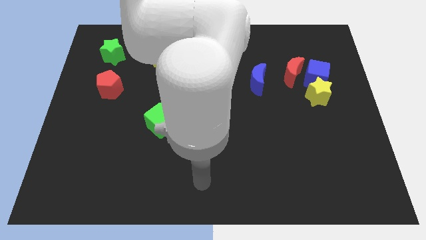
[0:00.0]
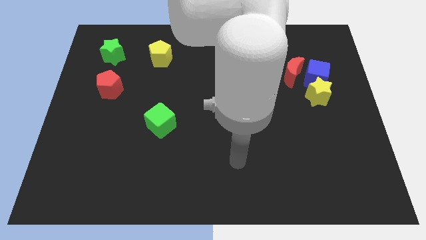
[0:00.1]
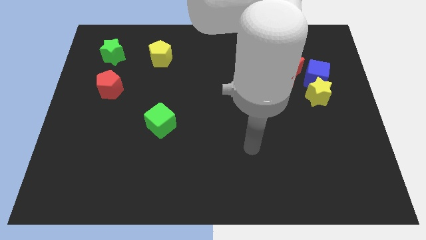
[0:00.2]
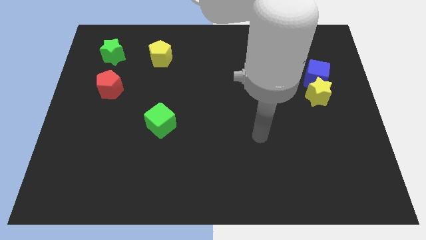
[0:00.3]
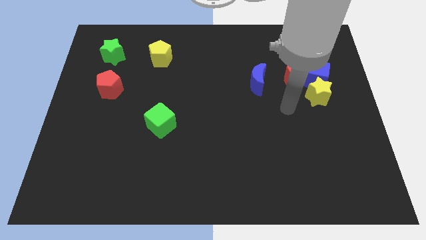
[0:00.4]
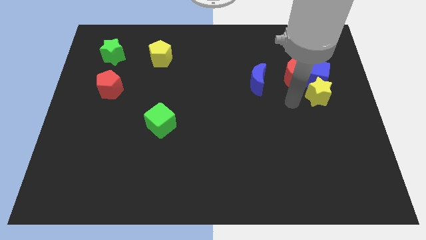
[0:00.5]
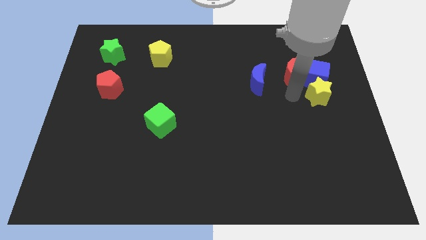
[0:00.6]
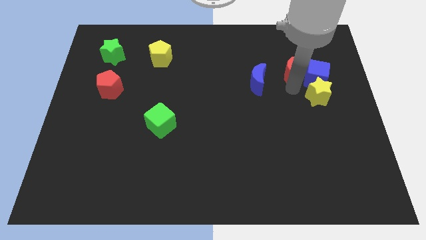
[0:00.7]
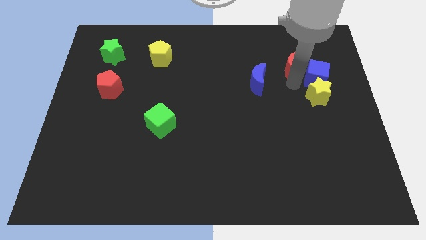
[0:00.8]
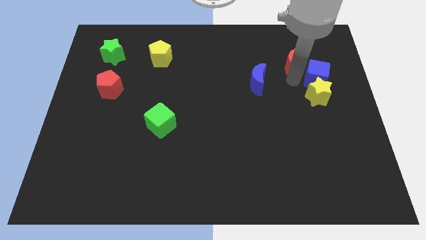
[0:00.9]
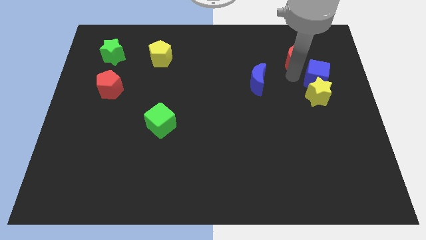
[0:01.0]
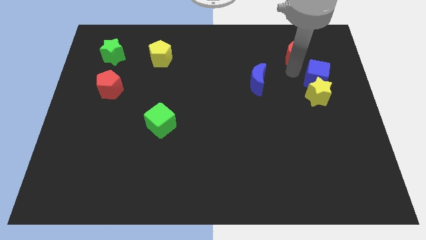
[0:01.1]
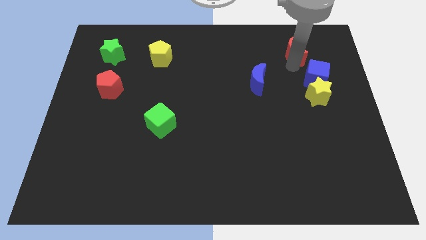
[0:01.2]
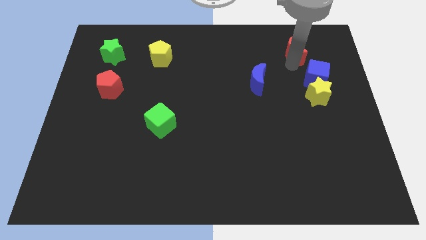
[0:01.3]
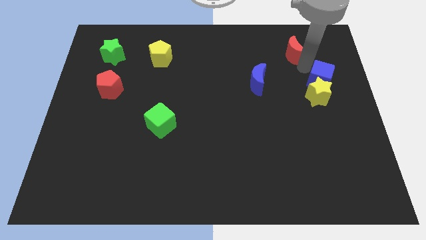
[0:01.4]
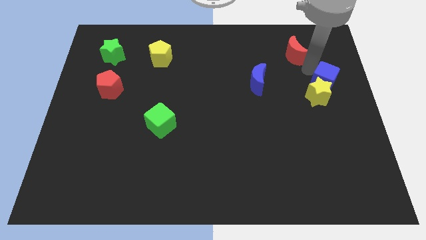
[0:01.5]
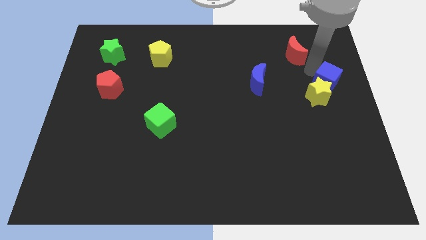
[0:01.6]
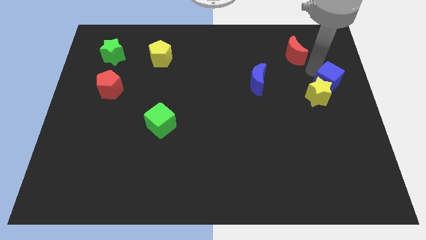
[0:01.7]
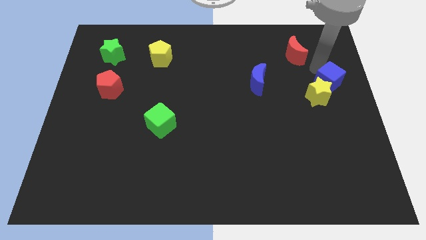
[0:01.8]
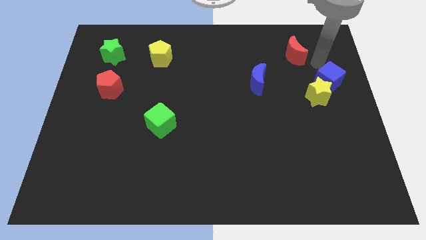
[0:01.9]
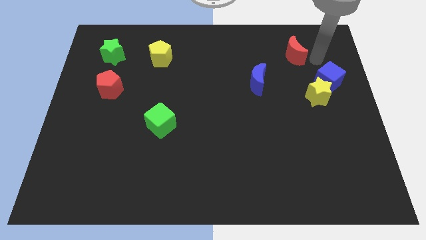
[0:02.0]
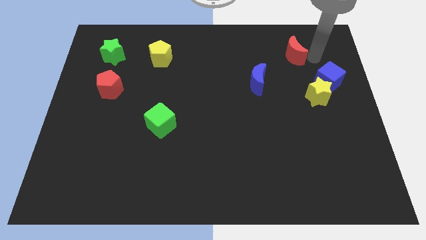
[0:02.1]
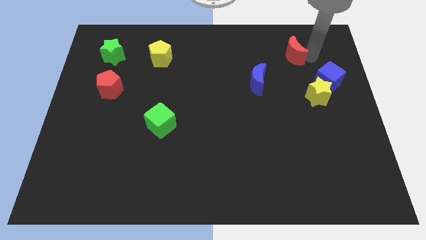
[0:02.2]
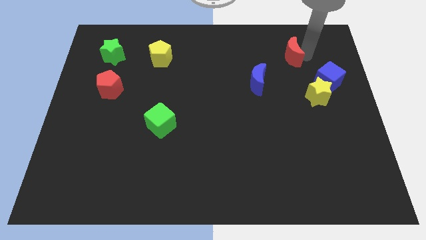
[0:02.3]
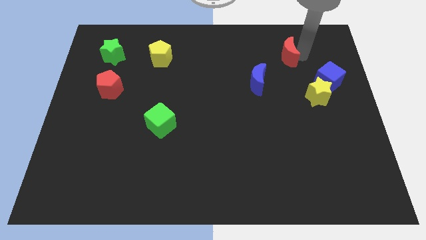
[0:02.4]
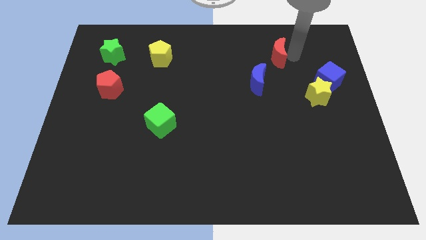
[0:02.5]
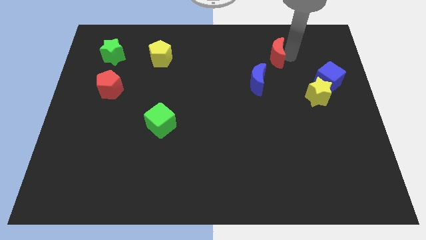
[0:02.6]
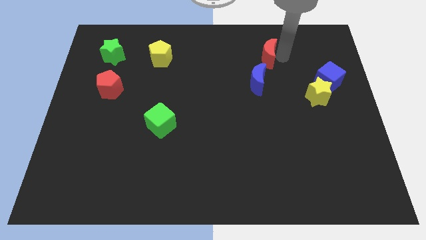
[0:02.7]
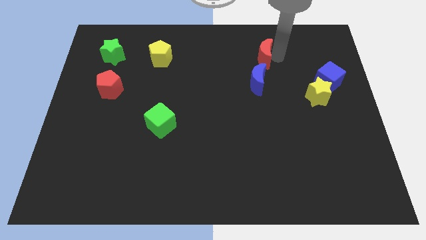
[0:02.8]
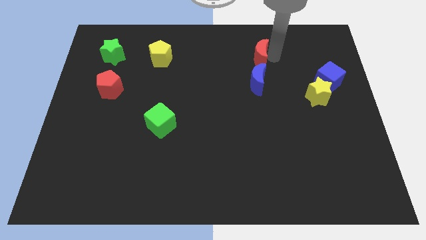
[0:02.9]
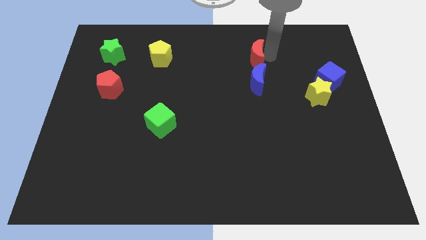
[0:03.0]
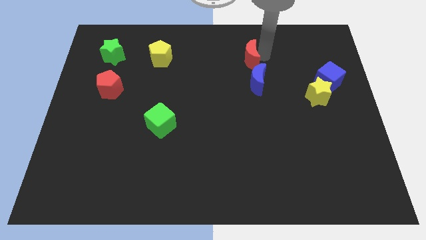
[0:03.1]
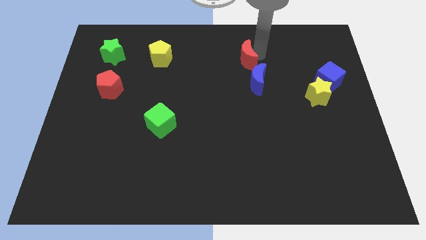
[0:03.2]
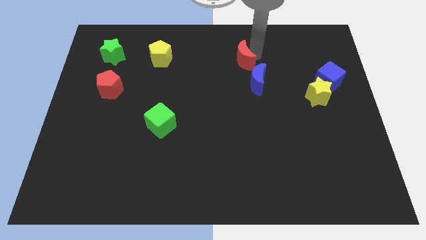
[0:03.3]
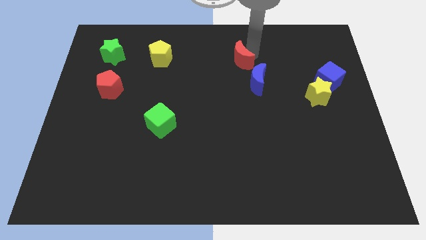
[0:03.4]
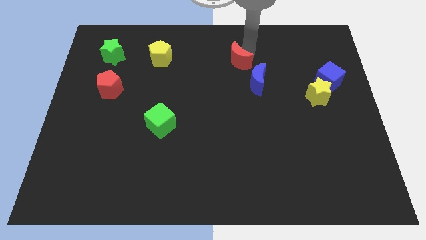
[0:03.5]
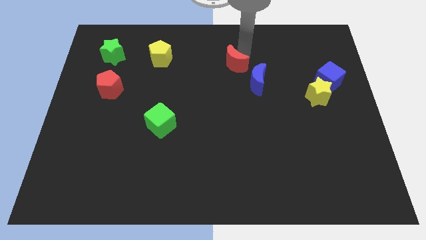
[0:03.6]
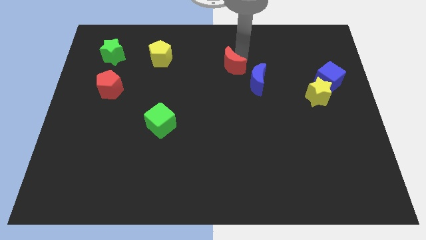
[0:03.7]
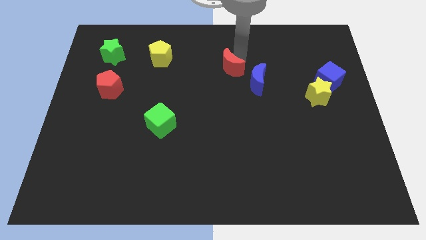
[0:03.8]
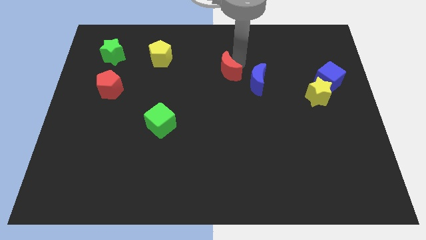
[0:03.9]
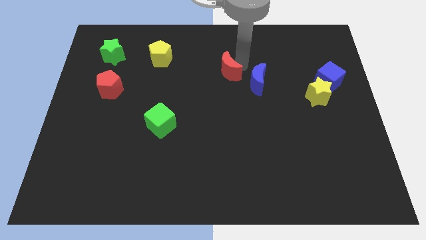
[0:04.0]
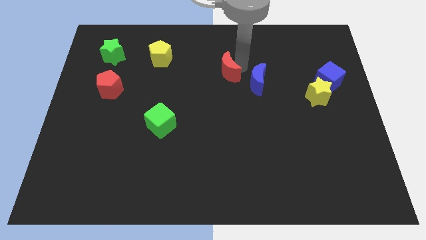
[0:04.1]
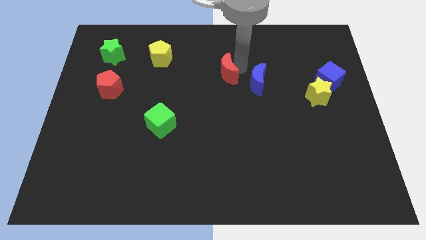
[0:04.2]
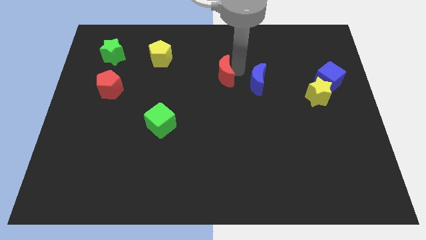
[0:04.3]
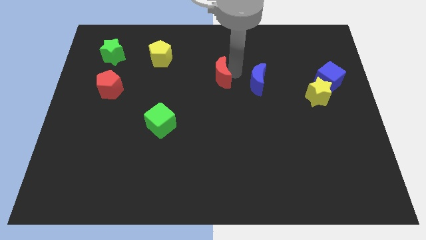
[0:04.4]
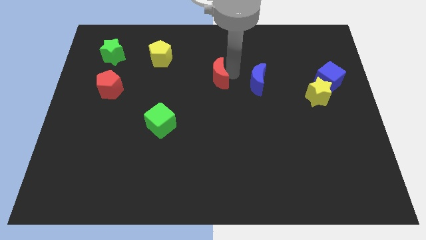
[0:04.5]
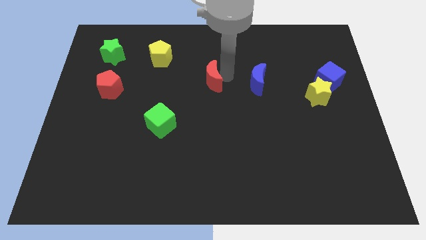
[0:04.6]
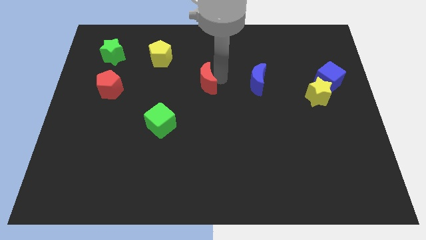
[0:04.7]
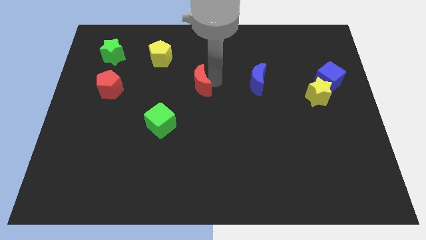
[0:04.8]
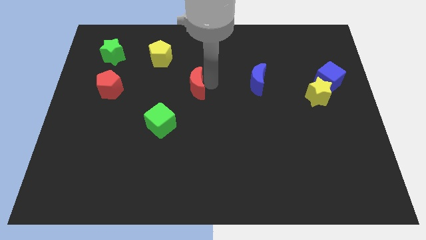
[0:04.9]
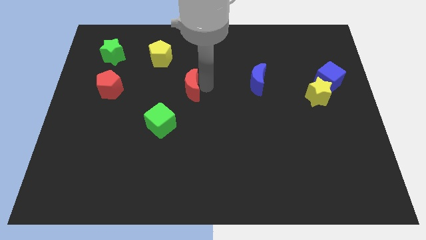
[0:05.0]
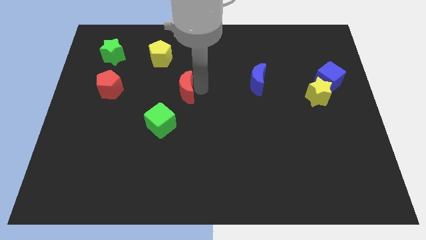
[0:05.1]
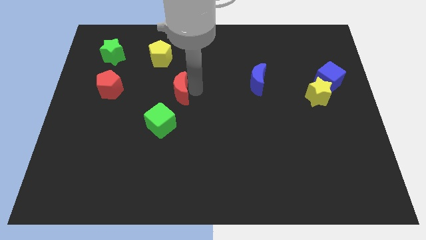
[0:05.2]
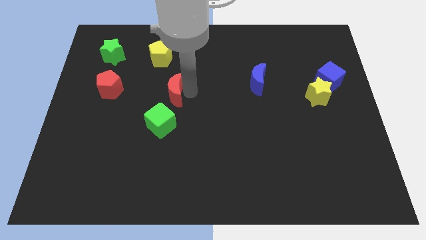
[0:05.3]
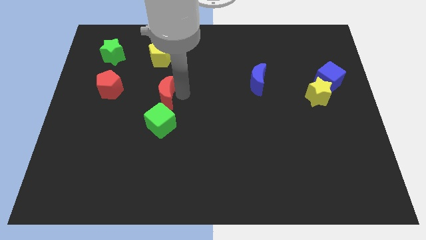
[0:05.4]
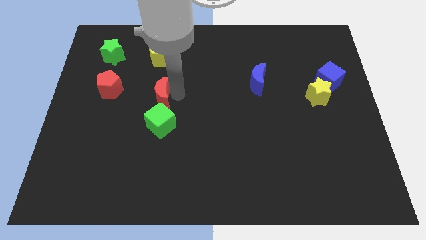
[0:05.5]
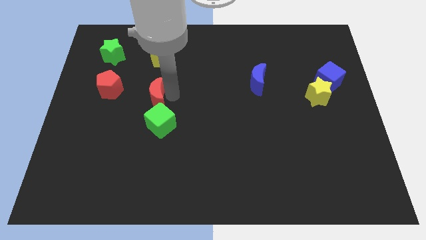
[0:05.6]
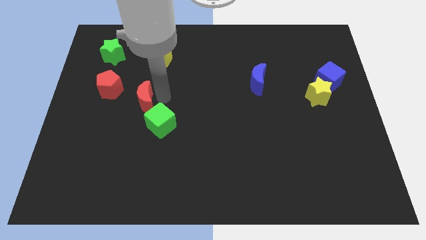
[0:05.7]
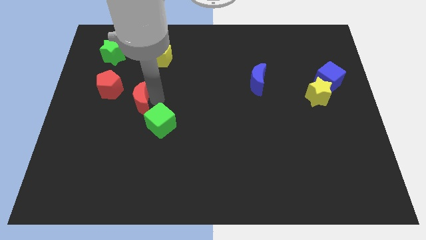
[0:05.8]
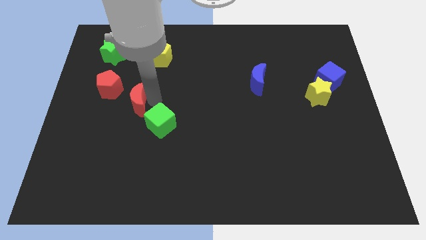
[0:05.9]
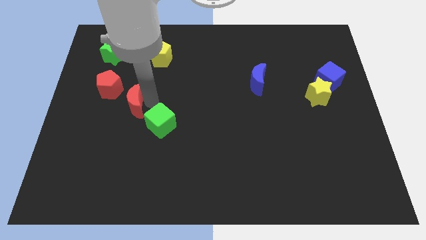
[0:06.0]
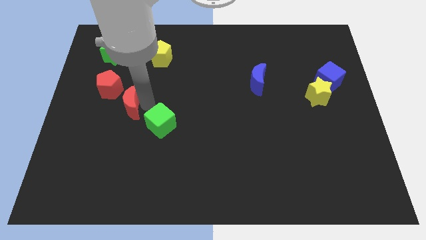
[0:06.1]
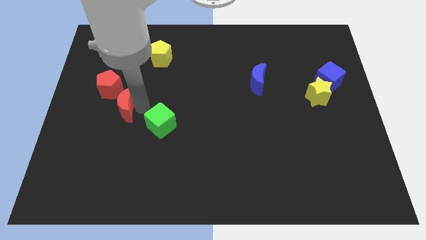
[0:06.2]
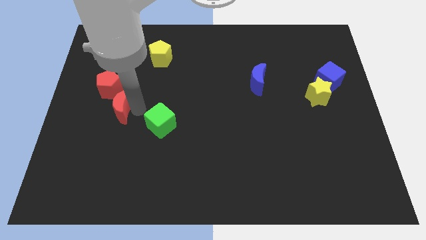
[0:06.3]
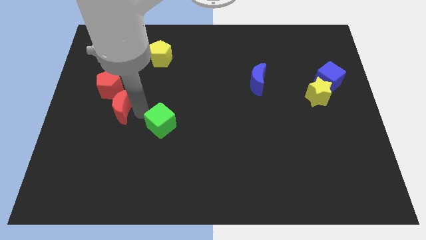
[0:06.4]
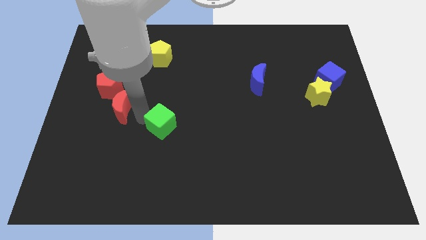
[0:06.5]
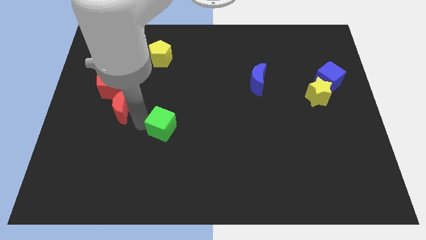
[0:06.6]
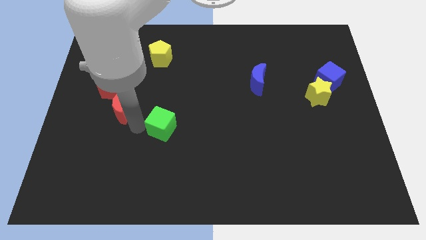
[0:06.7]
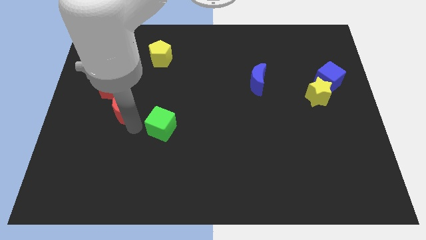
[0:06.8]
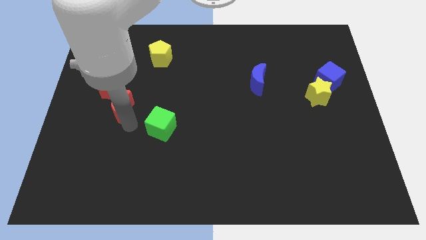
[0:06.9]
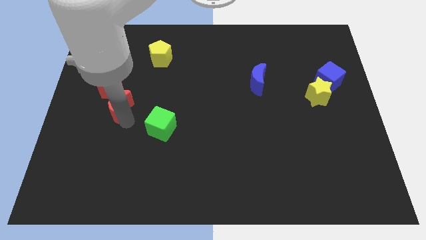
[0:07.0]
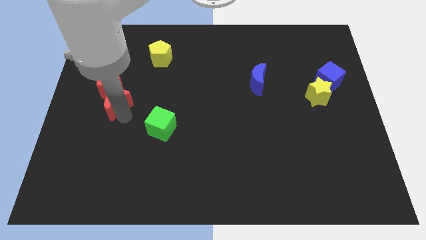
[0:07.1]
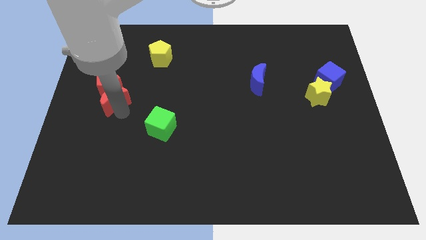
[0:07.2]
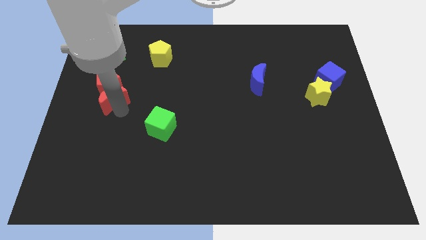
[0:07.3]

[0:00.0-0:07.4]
slide the red moon next to the red pentagon

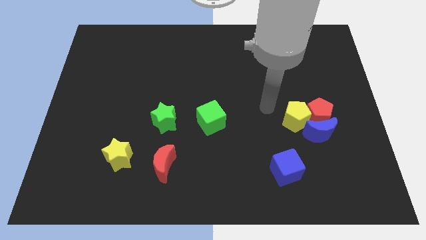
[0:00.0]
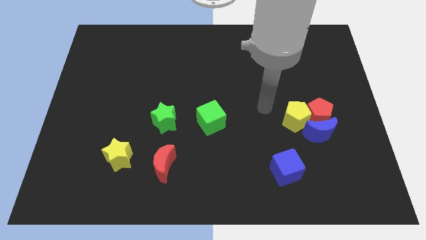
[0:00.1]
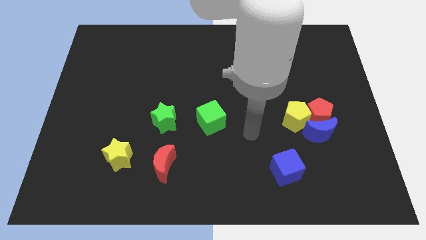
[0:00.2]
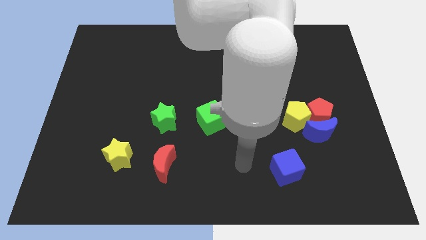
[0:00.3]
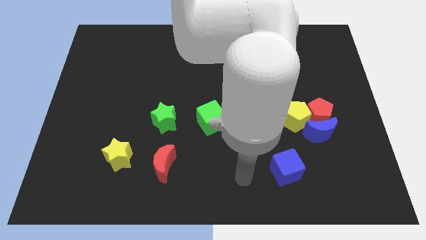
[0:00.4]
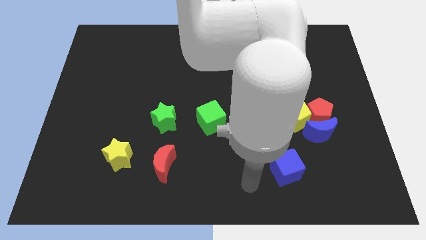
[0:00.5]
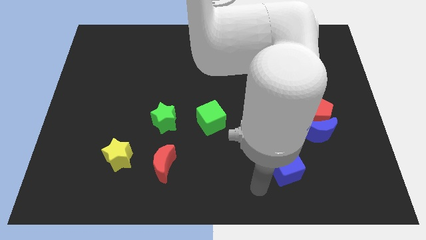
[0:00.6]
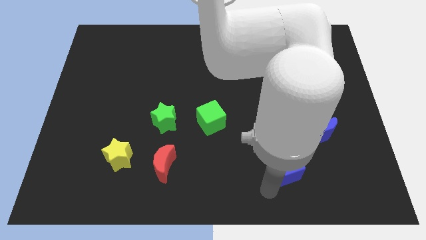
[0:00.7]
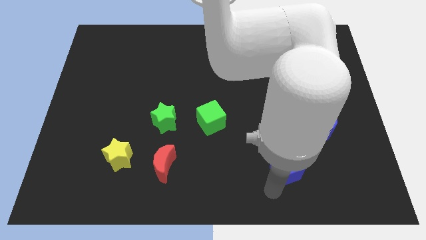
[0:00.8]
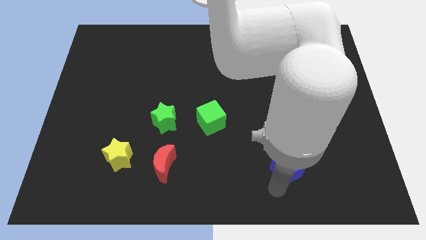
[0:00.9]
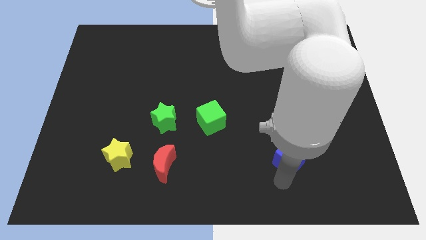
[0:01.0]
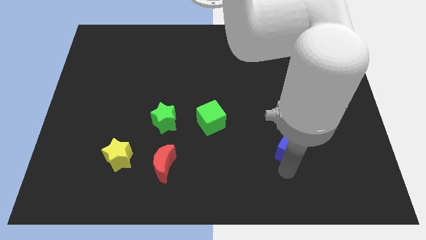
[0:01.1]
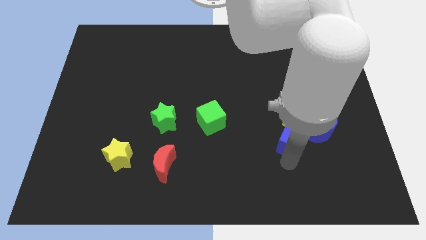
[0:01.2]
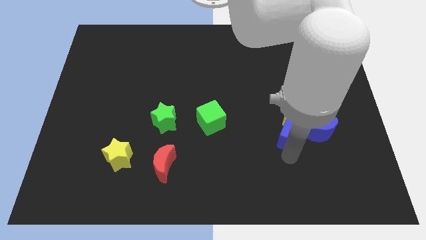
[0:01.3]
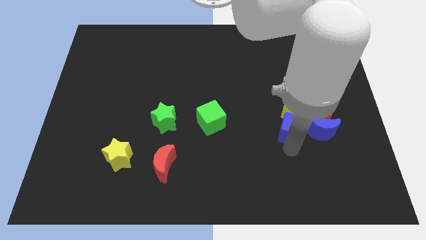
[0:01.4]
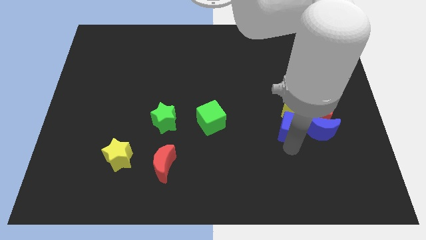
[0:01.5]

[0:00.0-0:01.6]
slide the blue cube close to the yellow pentagon
